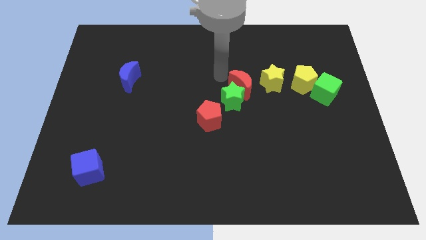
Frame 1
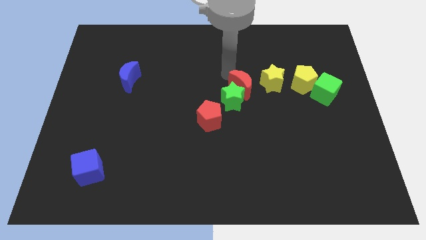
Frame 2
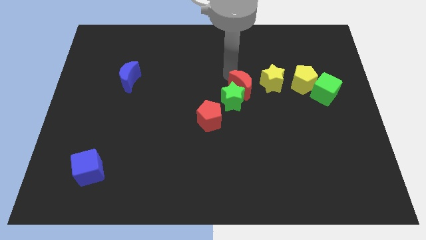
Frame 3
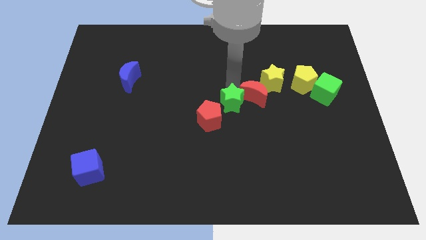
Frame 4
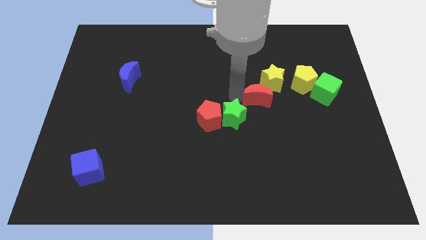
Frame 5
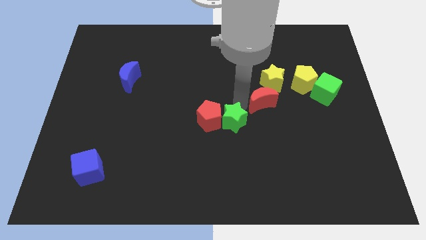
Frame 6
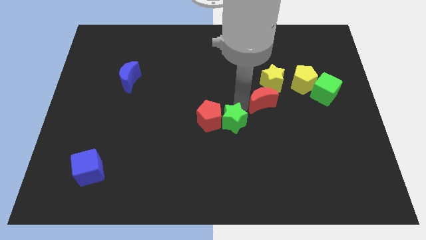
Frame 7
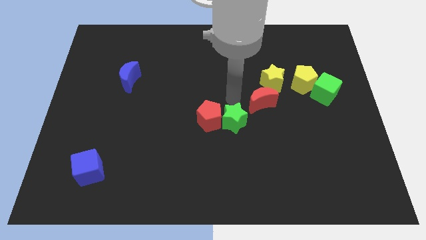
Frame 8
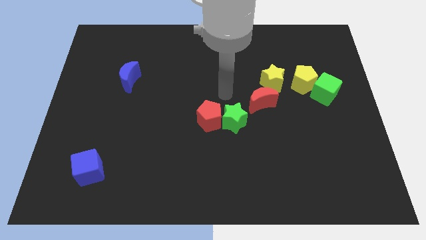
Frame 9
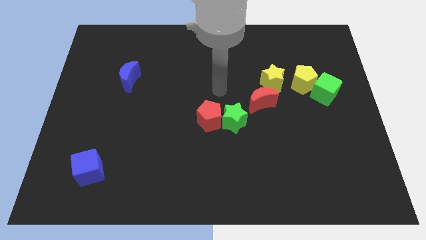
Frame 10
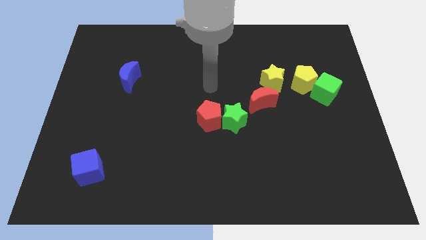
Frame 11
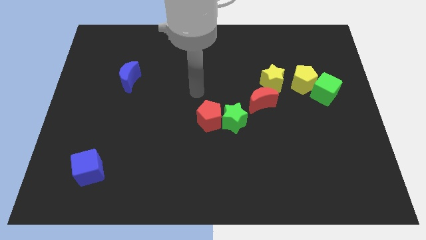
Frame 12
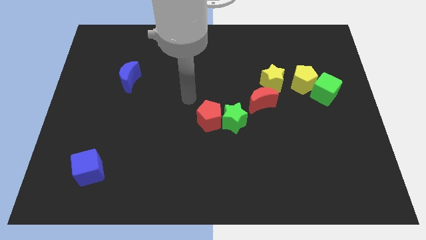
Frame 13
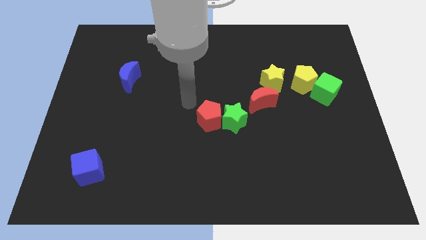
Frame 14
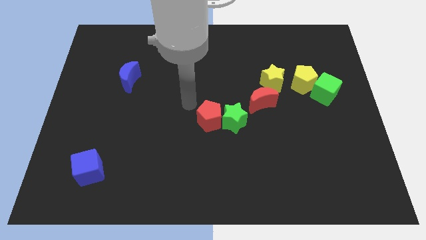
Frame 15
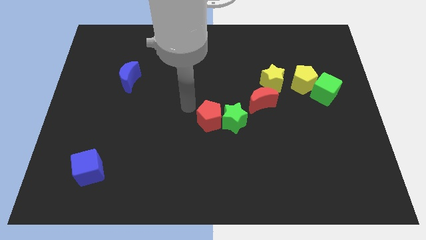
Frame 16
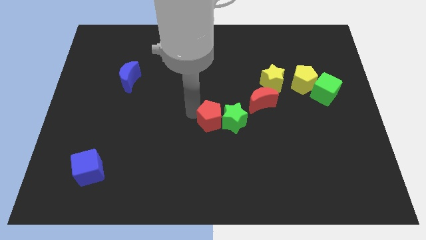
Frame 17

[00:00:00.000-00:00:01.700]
put your arm at the top left side of red pentagon

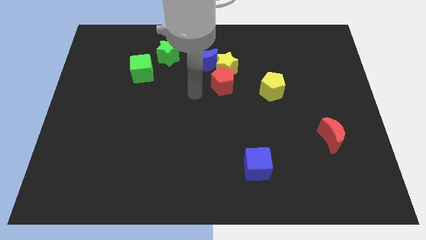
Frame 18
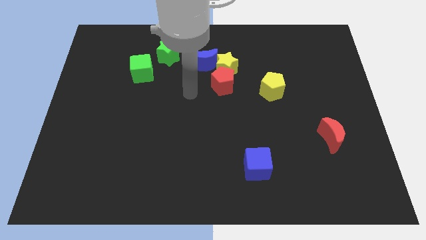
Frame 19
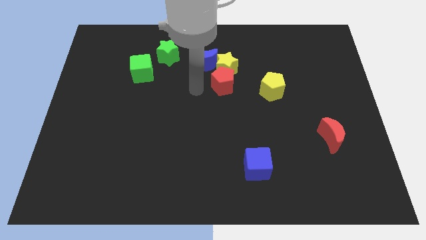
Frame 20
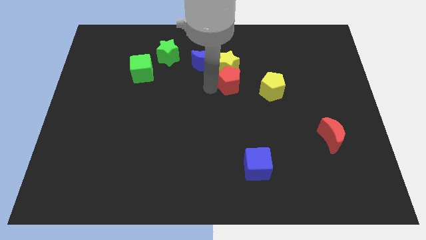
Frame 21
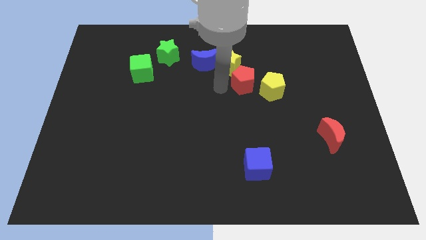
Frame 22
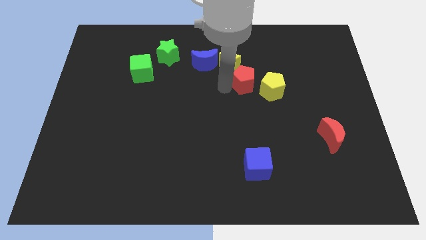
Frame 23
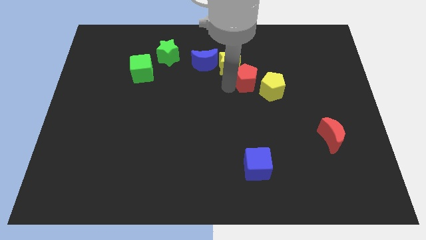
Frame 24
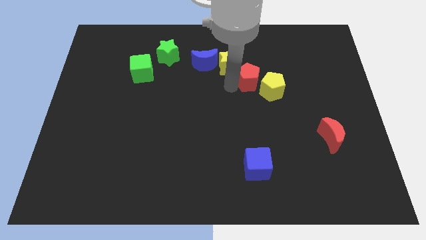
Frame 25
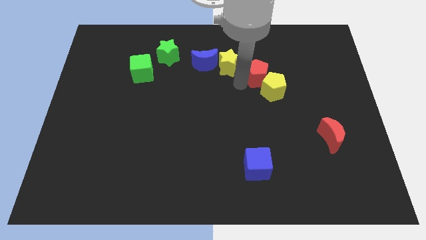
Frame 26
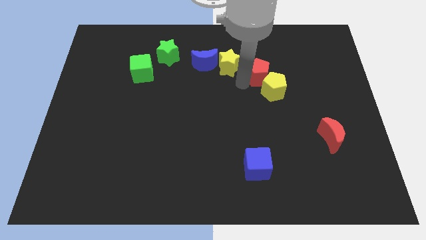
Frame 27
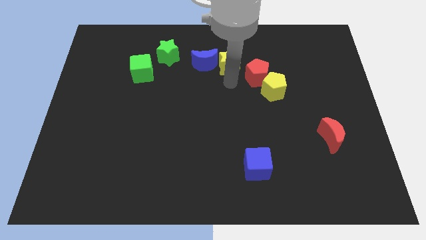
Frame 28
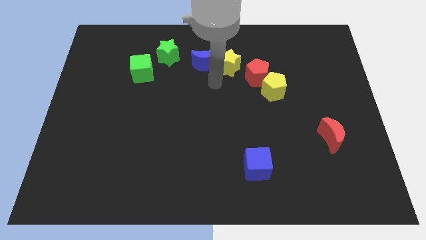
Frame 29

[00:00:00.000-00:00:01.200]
push the red pentagon to the top left of the yellow pentagon

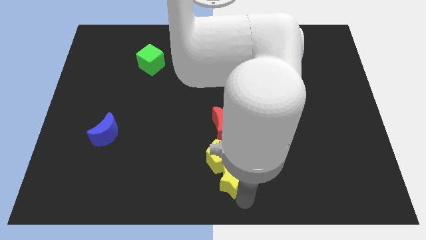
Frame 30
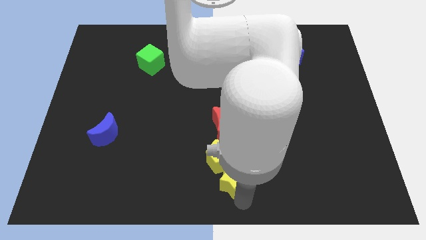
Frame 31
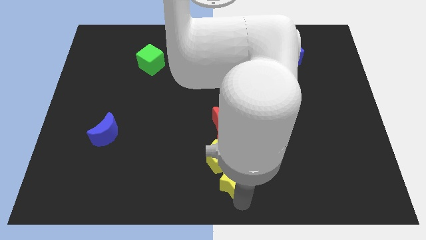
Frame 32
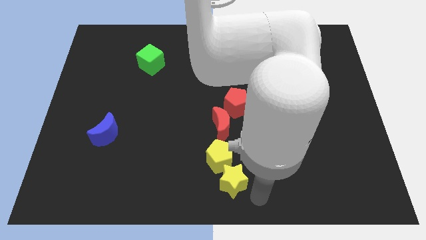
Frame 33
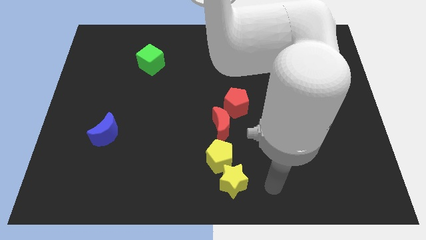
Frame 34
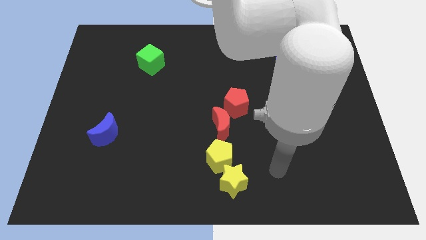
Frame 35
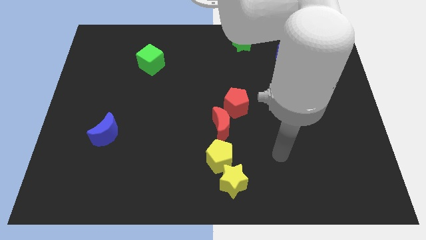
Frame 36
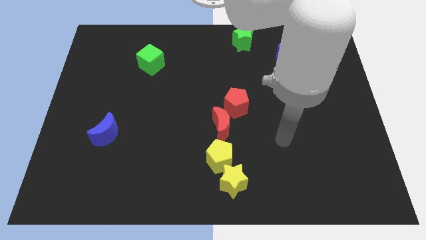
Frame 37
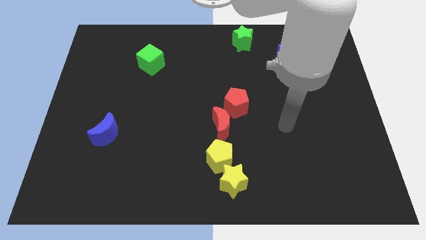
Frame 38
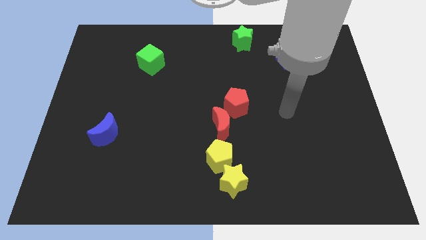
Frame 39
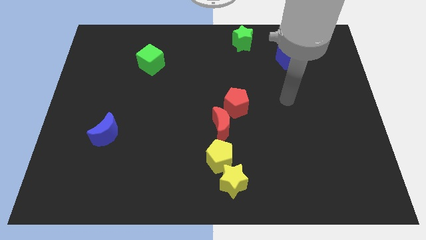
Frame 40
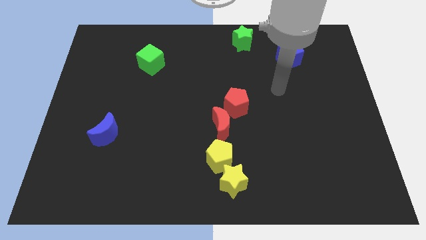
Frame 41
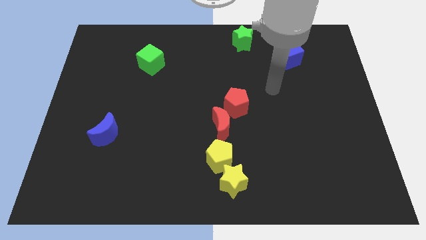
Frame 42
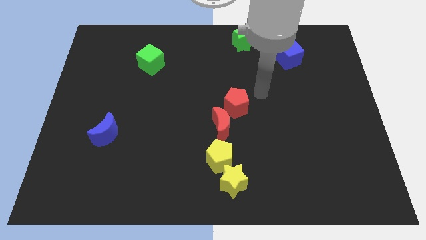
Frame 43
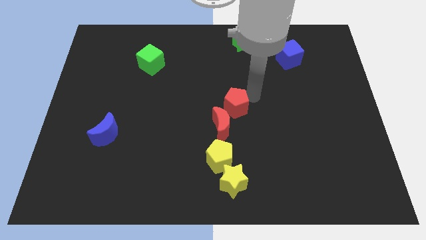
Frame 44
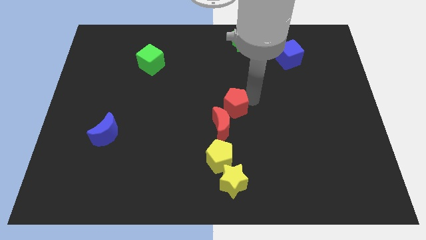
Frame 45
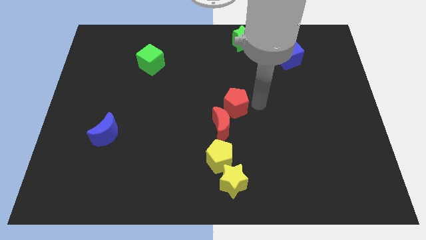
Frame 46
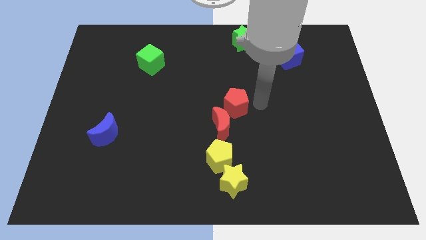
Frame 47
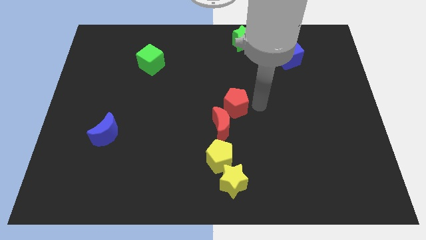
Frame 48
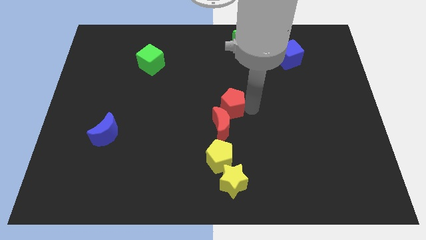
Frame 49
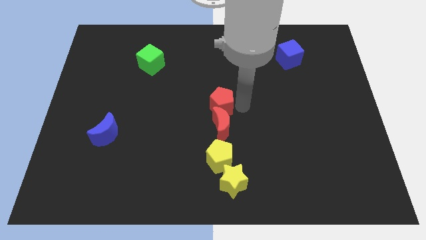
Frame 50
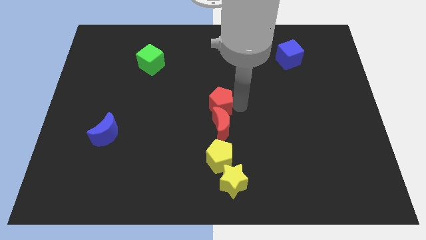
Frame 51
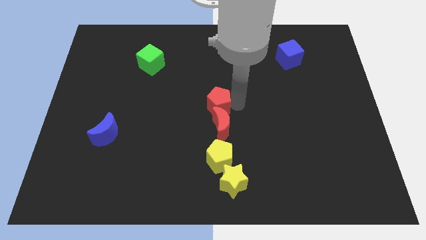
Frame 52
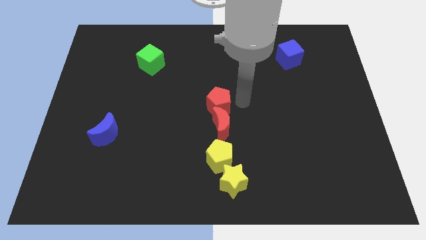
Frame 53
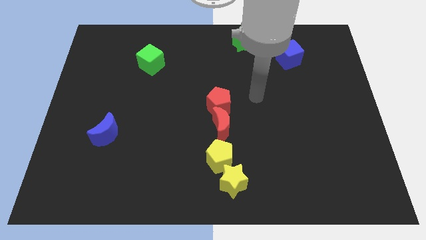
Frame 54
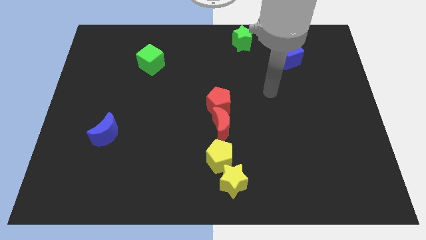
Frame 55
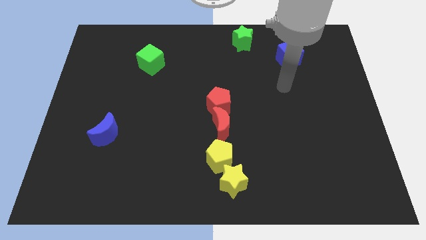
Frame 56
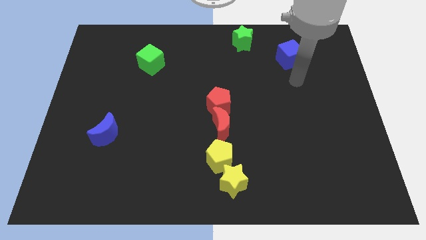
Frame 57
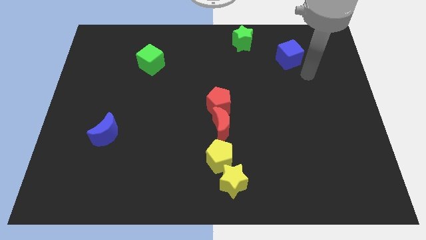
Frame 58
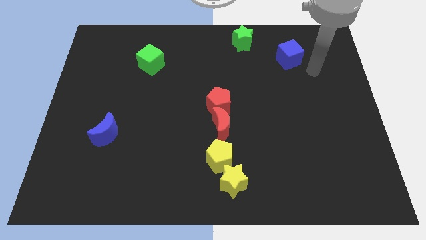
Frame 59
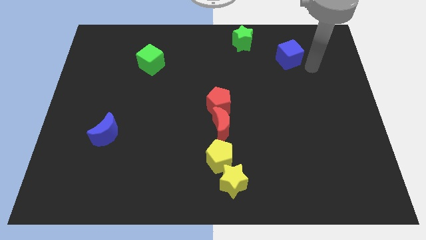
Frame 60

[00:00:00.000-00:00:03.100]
slide red pentagon slightly to the center

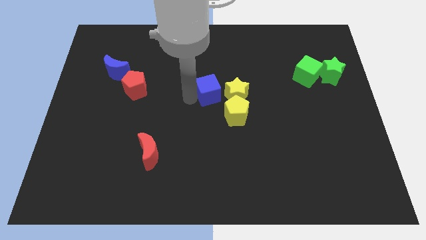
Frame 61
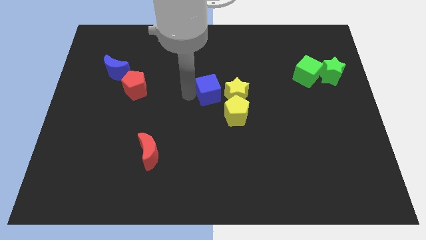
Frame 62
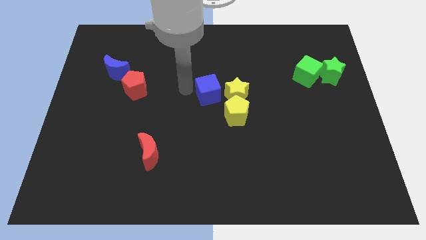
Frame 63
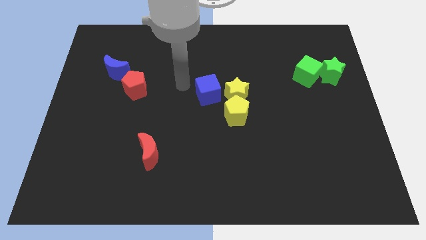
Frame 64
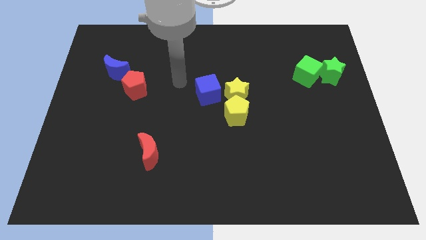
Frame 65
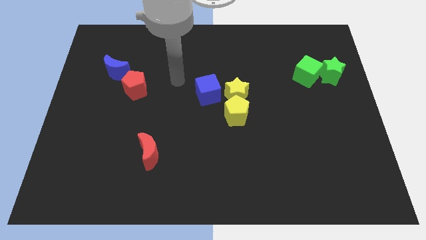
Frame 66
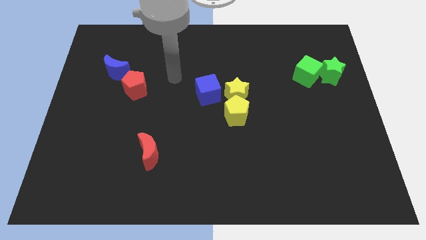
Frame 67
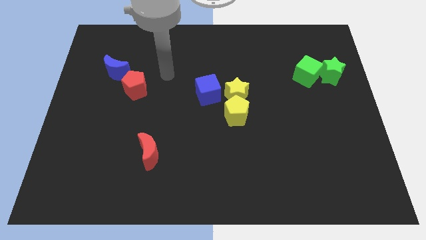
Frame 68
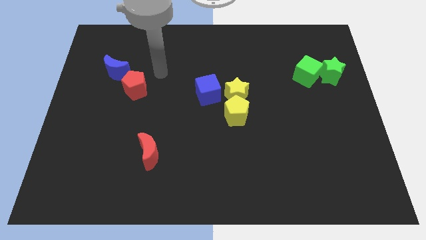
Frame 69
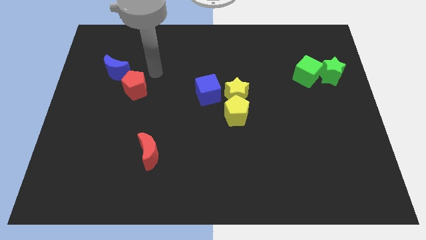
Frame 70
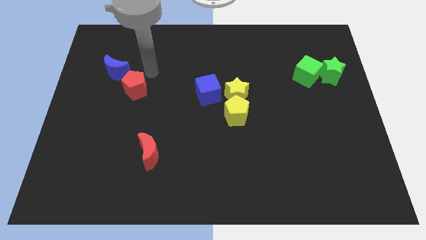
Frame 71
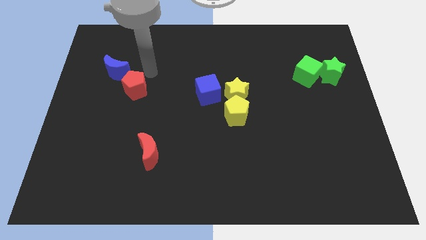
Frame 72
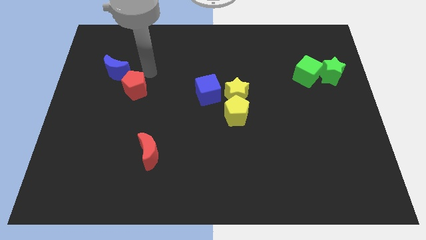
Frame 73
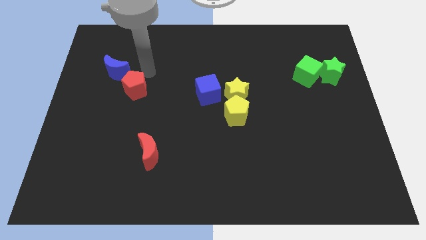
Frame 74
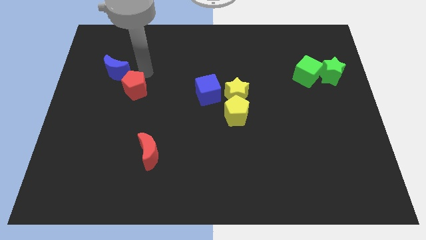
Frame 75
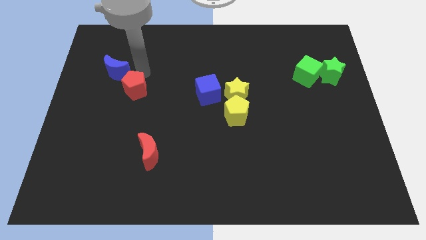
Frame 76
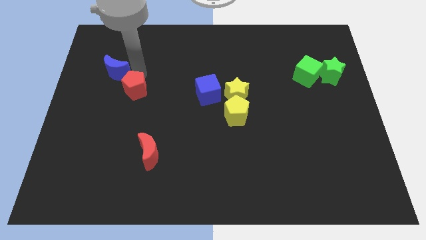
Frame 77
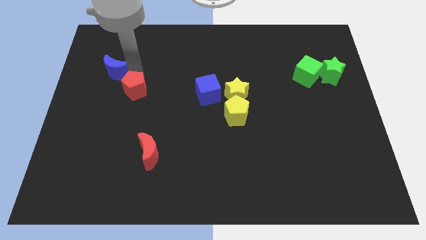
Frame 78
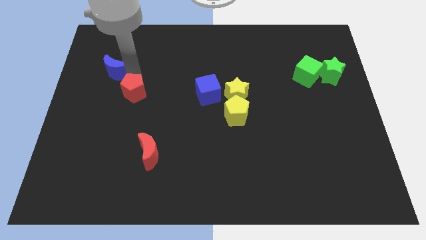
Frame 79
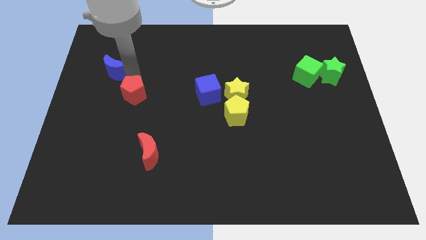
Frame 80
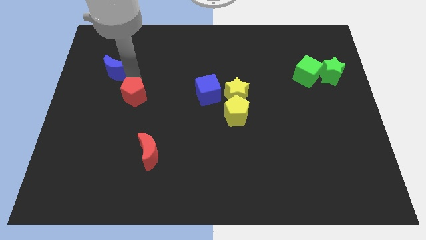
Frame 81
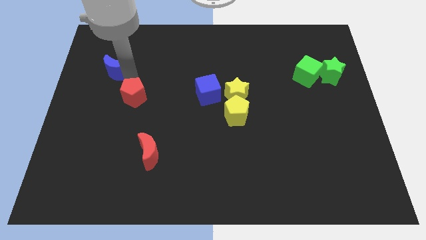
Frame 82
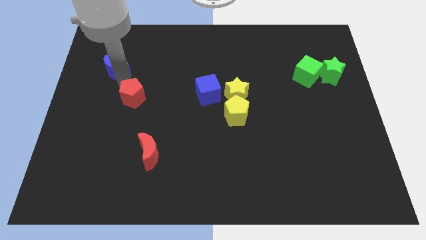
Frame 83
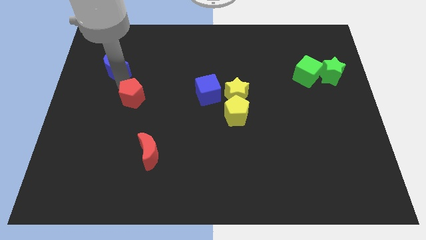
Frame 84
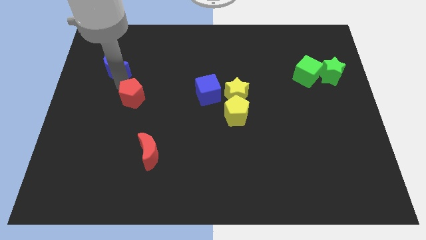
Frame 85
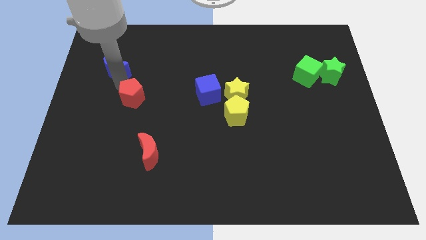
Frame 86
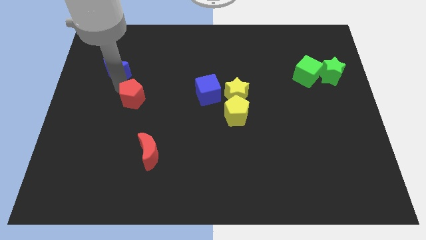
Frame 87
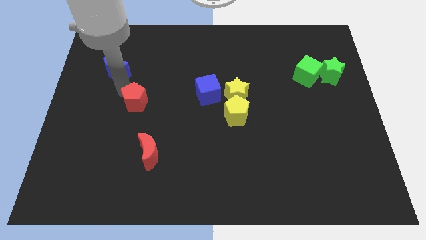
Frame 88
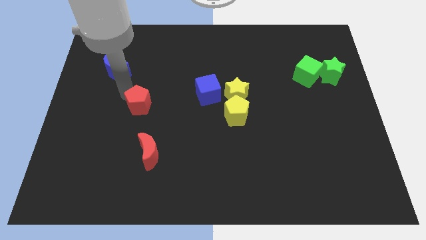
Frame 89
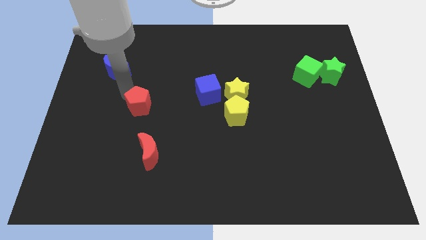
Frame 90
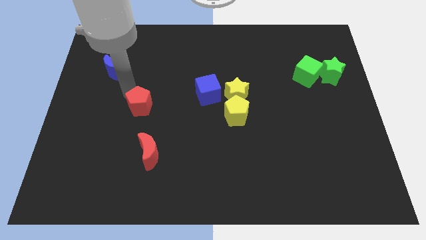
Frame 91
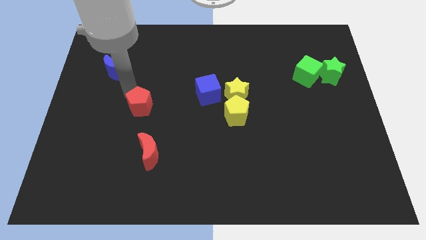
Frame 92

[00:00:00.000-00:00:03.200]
separate the red pentagon with the blue moon towards the red moon
